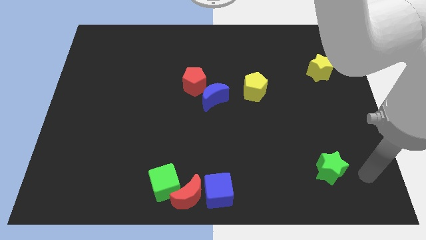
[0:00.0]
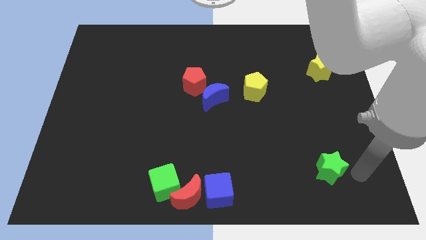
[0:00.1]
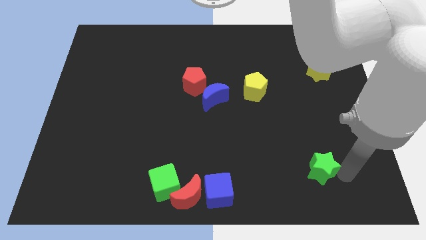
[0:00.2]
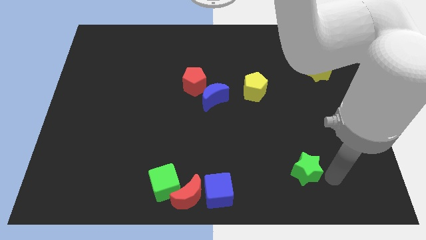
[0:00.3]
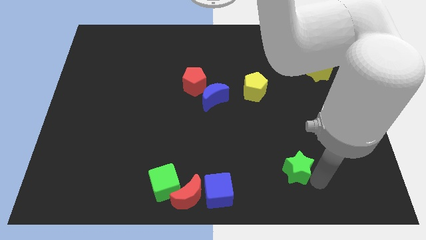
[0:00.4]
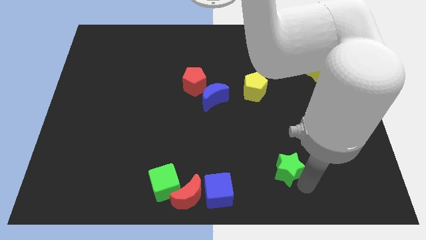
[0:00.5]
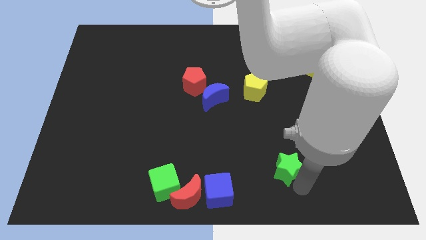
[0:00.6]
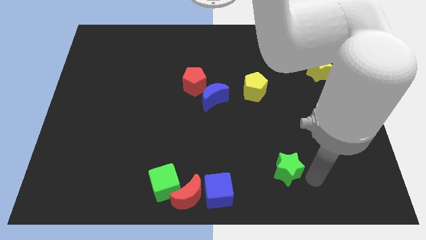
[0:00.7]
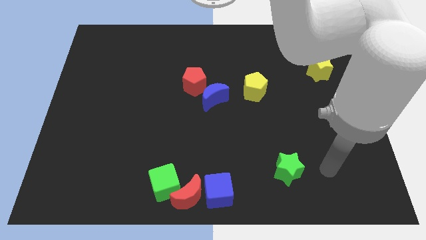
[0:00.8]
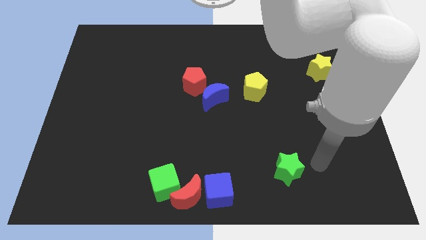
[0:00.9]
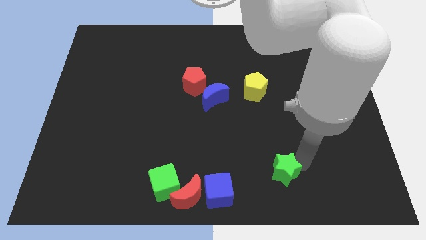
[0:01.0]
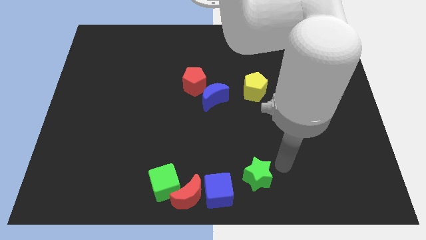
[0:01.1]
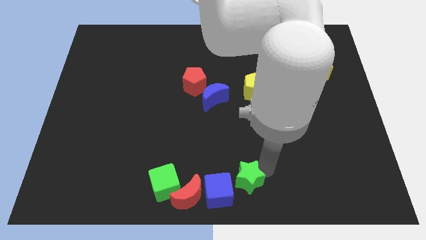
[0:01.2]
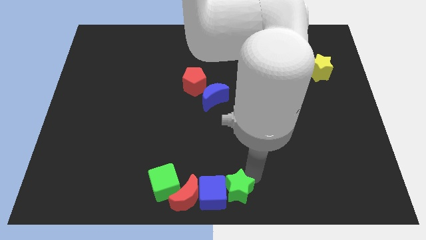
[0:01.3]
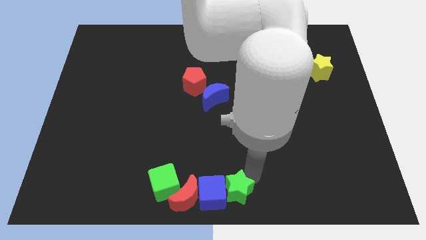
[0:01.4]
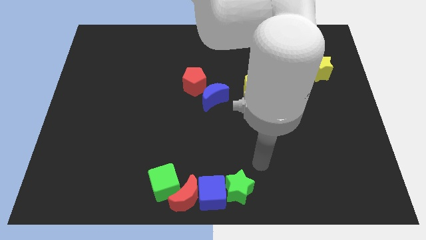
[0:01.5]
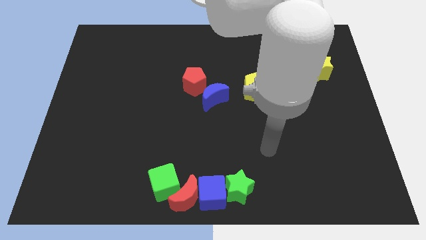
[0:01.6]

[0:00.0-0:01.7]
move the green star into the blue cube

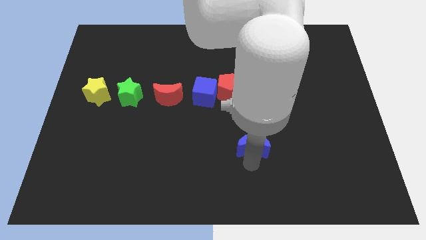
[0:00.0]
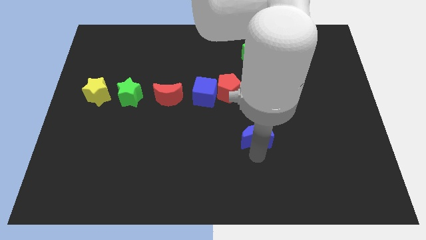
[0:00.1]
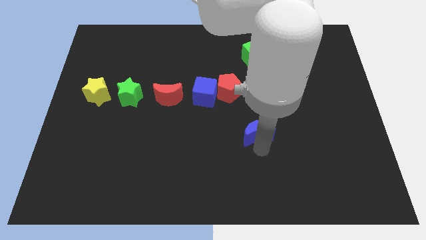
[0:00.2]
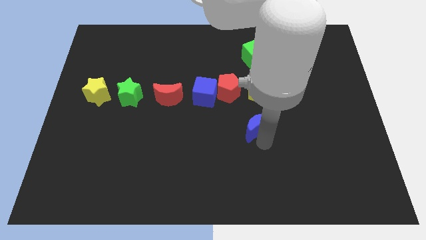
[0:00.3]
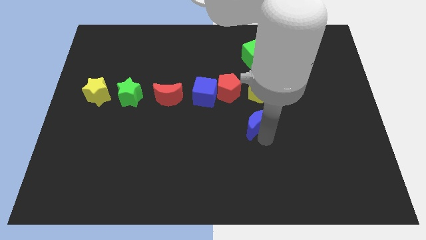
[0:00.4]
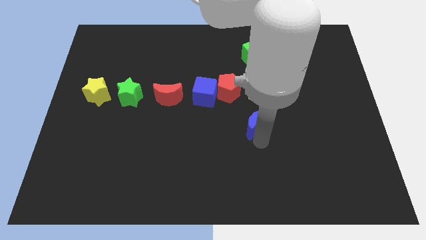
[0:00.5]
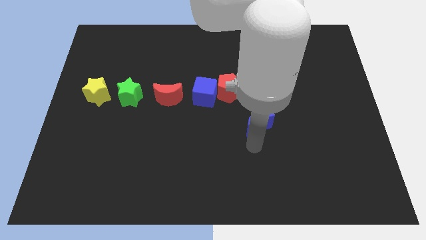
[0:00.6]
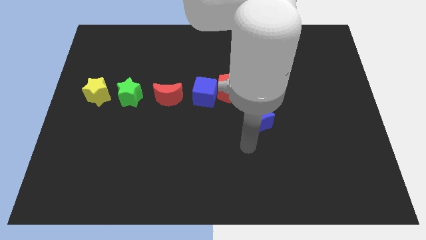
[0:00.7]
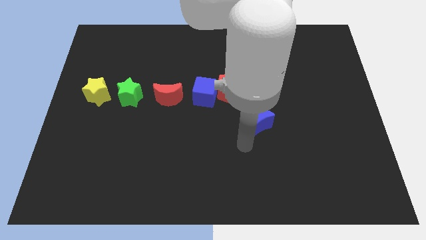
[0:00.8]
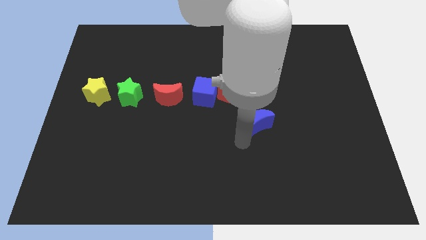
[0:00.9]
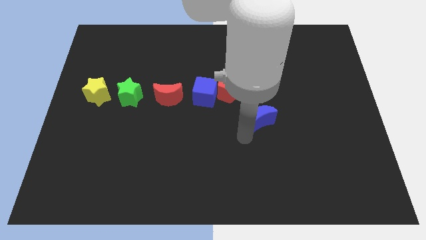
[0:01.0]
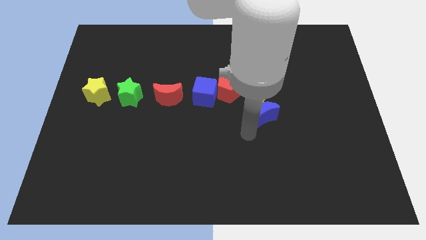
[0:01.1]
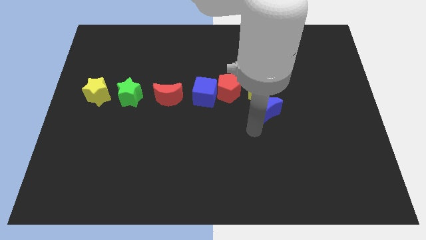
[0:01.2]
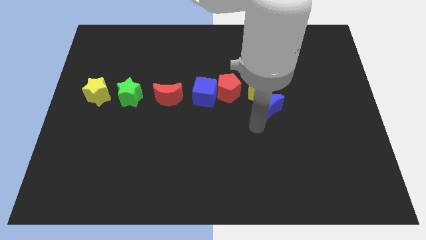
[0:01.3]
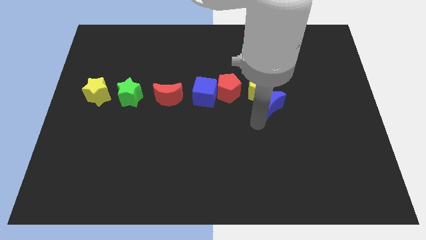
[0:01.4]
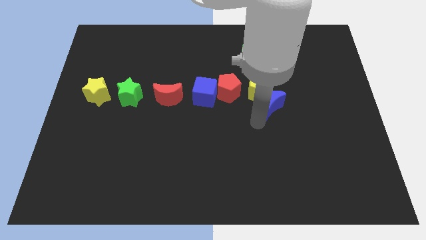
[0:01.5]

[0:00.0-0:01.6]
place blue crescent close to yellow pentagon

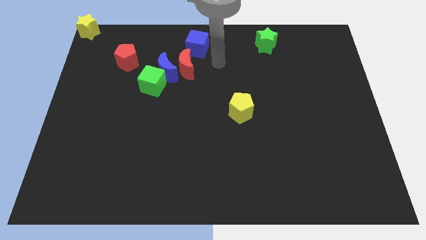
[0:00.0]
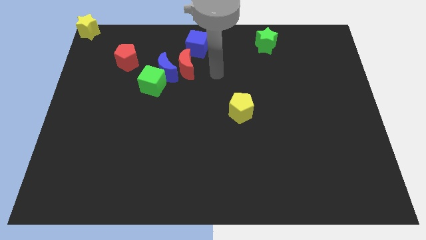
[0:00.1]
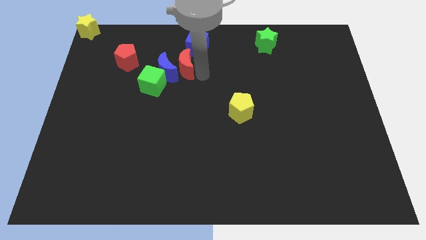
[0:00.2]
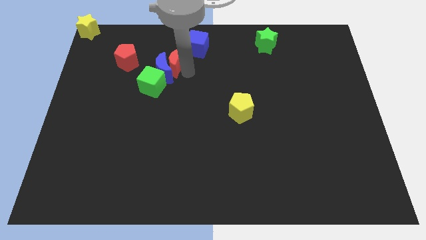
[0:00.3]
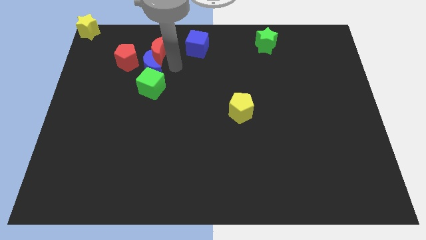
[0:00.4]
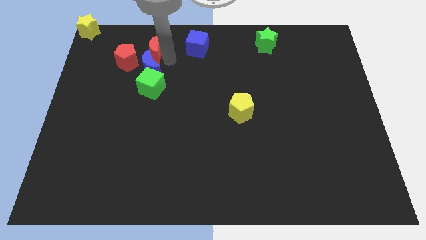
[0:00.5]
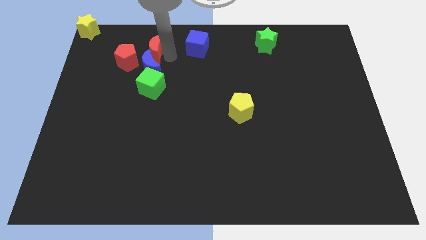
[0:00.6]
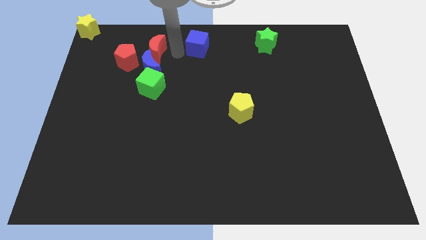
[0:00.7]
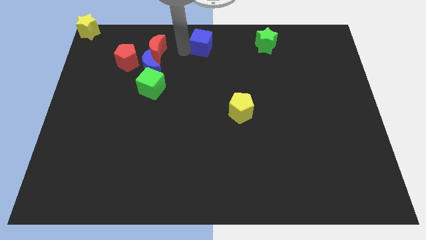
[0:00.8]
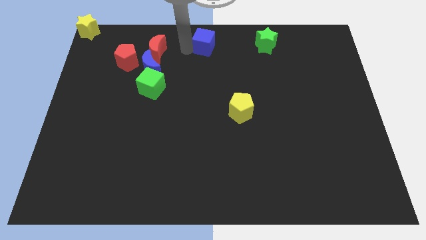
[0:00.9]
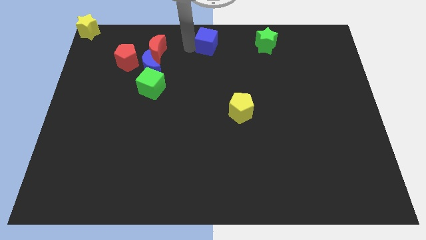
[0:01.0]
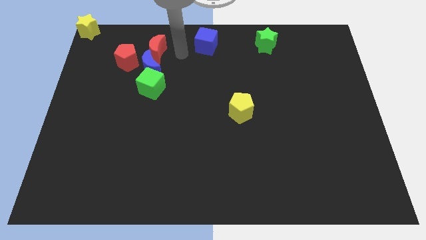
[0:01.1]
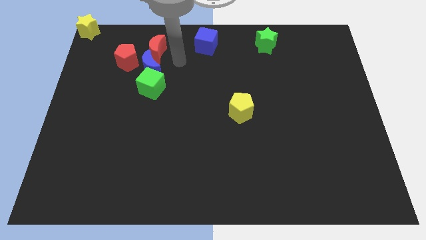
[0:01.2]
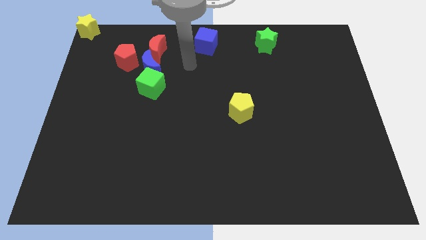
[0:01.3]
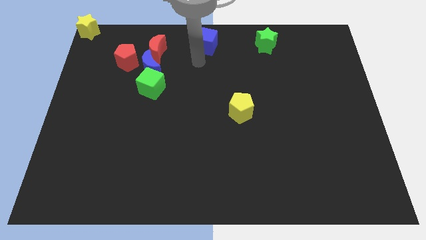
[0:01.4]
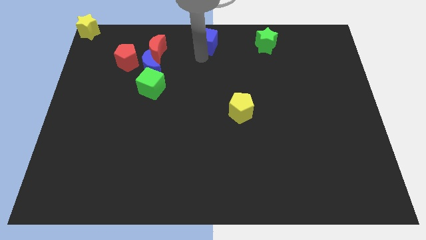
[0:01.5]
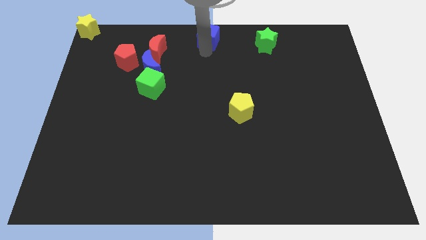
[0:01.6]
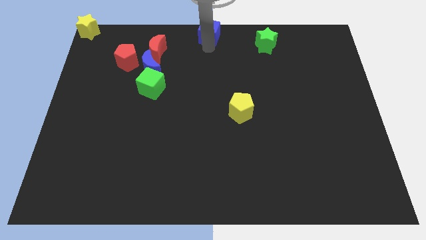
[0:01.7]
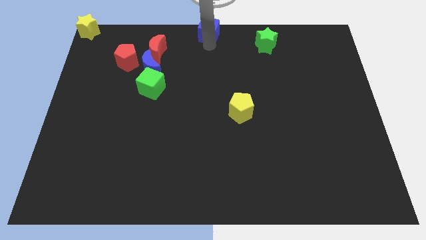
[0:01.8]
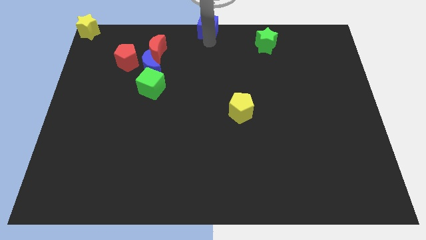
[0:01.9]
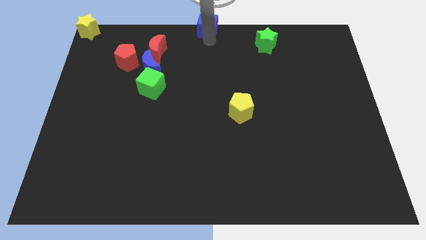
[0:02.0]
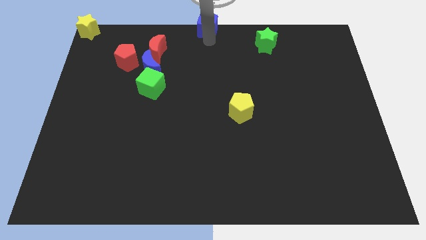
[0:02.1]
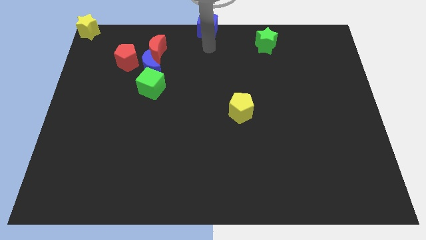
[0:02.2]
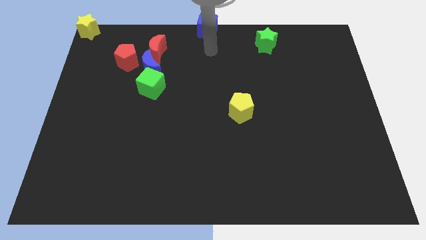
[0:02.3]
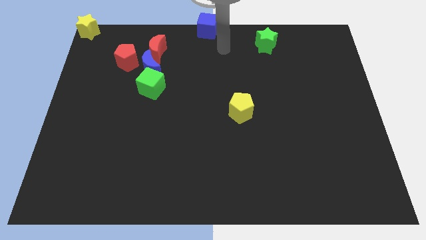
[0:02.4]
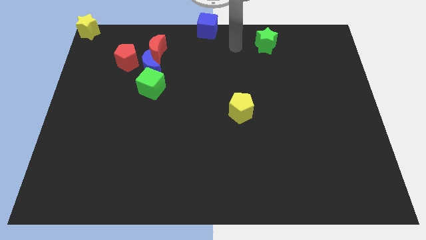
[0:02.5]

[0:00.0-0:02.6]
push blue cube towards top middle of the board

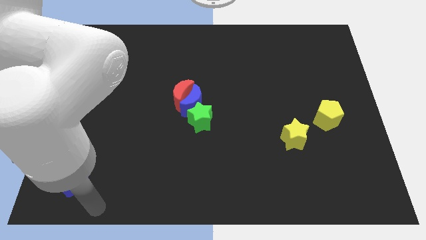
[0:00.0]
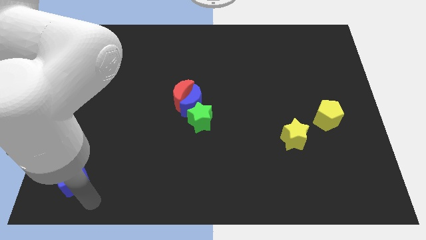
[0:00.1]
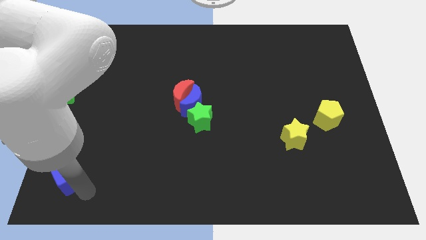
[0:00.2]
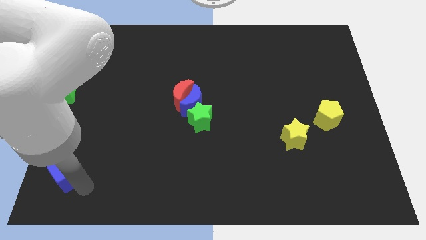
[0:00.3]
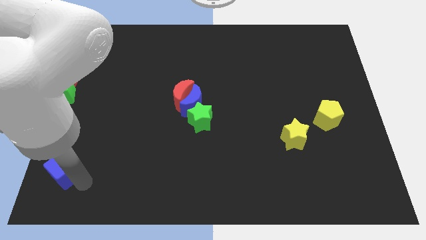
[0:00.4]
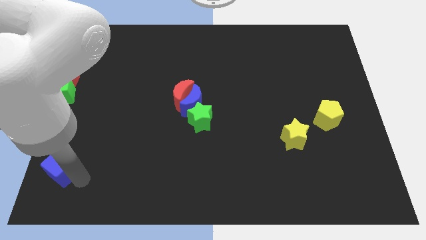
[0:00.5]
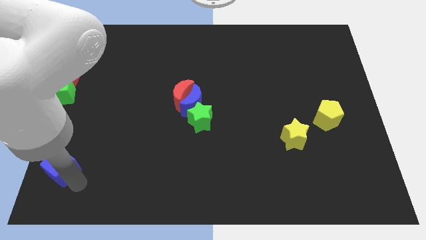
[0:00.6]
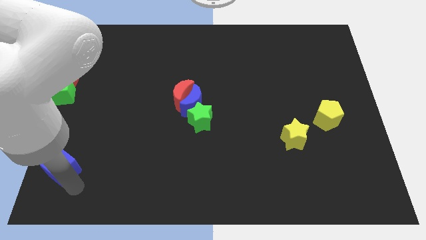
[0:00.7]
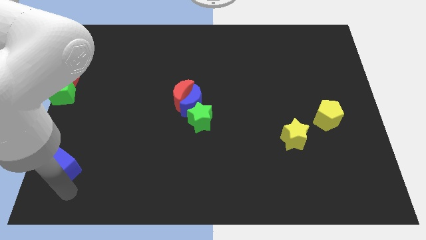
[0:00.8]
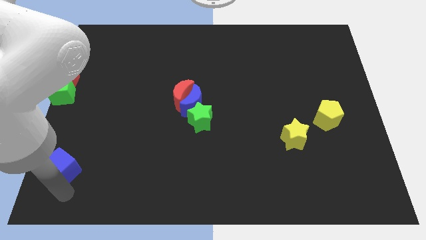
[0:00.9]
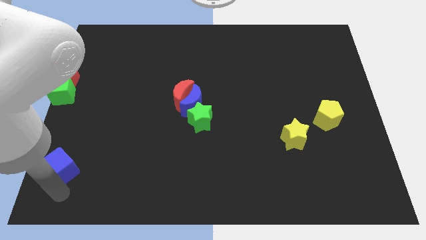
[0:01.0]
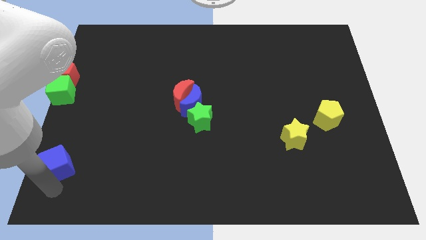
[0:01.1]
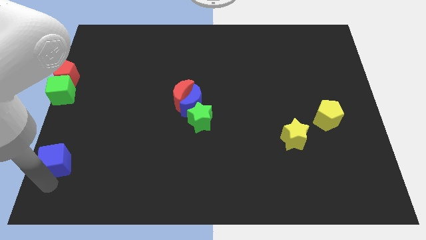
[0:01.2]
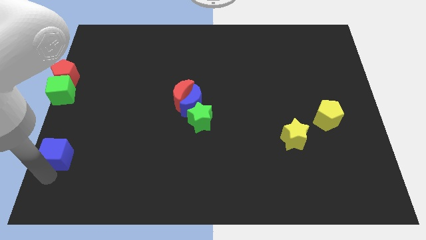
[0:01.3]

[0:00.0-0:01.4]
push the blue cube slightly to the left center of the board

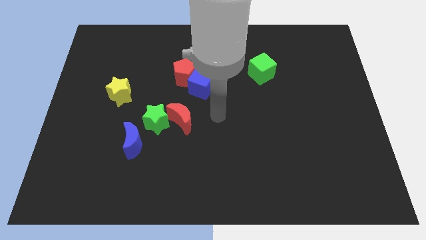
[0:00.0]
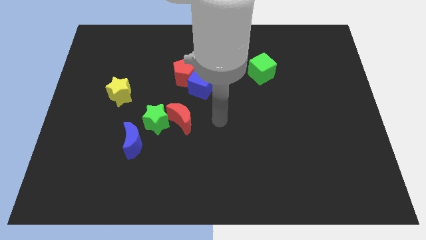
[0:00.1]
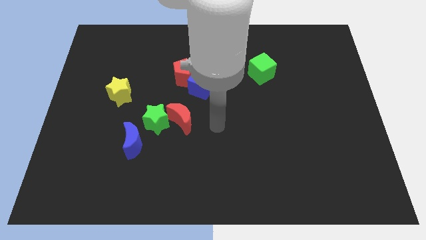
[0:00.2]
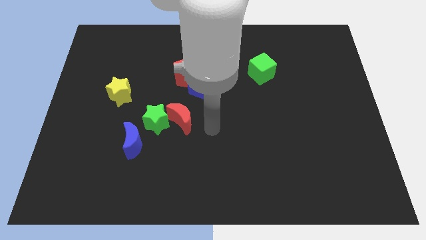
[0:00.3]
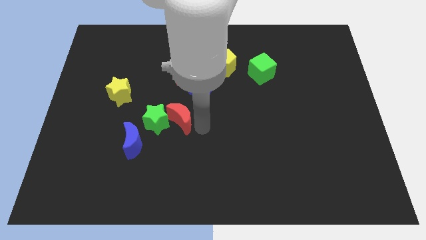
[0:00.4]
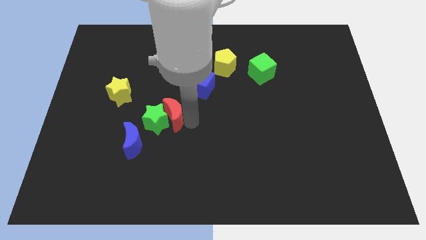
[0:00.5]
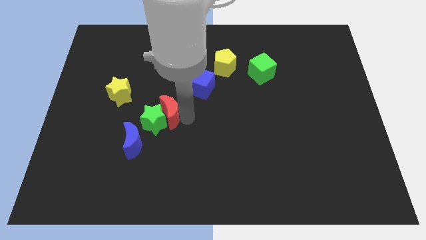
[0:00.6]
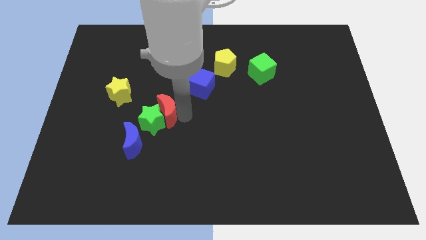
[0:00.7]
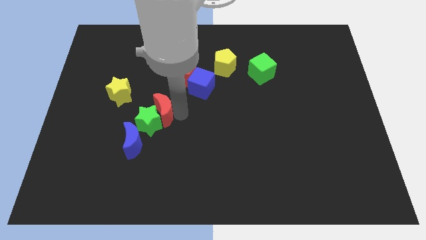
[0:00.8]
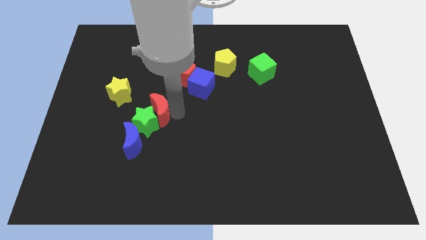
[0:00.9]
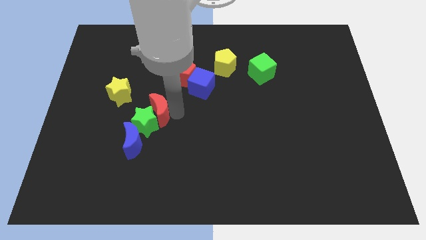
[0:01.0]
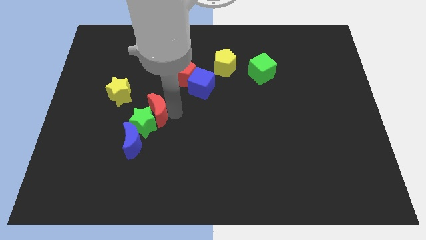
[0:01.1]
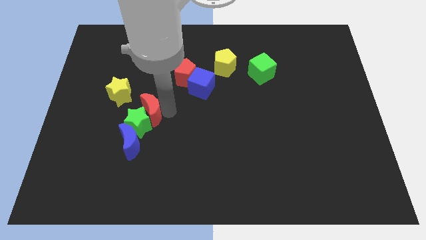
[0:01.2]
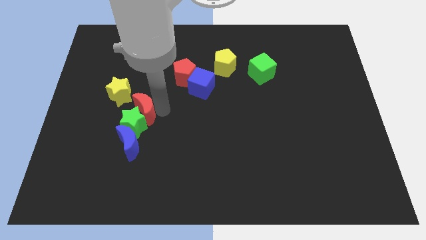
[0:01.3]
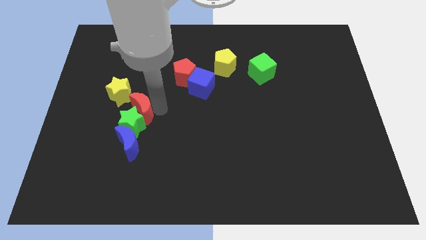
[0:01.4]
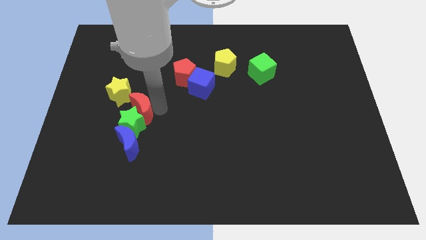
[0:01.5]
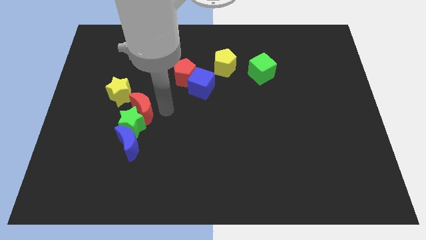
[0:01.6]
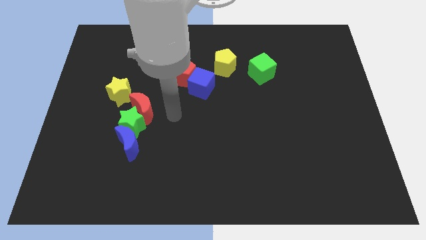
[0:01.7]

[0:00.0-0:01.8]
push the blue moon into the green star
